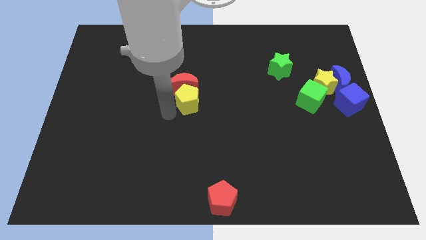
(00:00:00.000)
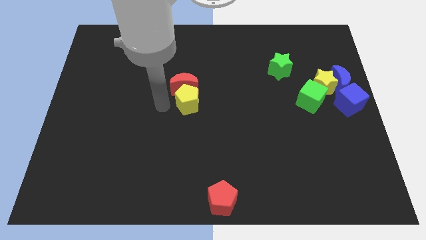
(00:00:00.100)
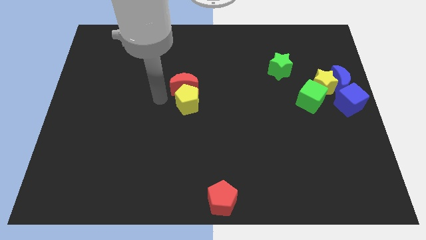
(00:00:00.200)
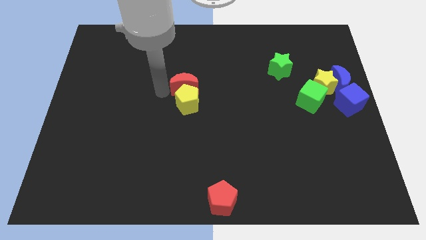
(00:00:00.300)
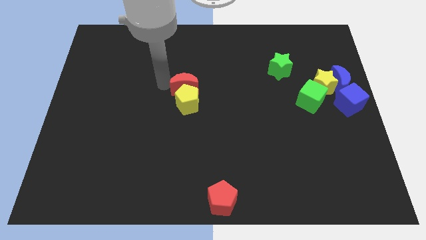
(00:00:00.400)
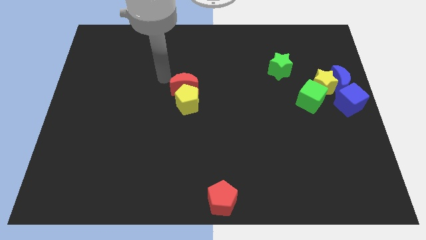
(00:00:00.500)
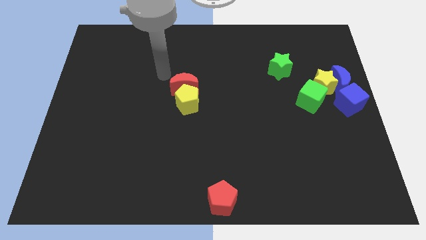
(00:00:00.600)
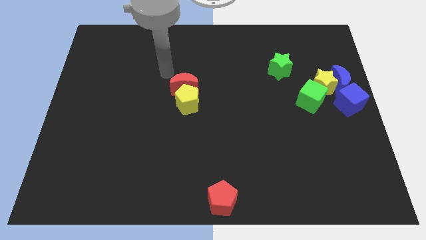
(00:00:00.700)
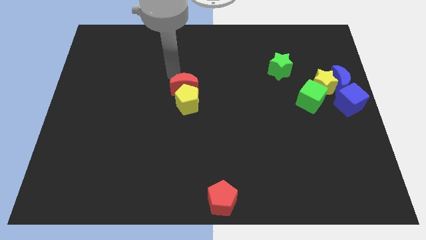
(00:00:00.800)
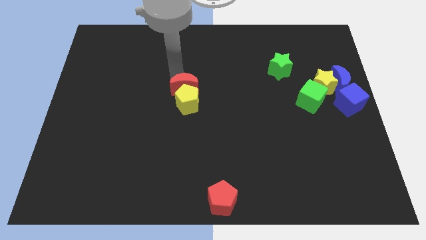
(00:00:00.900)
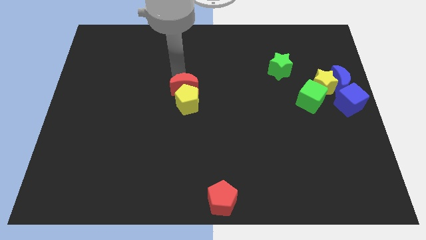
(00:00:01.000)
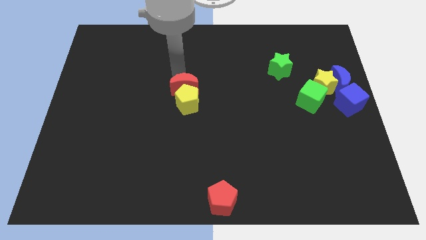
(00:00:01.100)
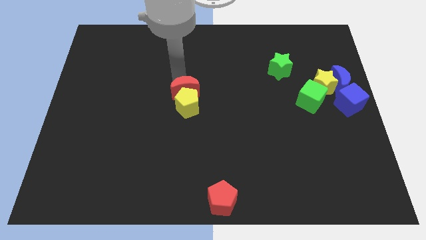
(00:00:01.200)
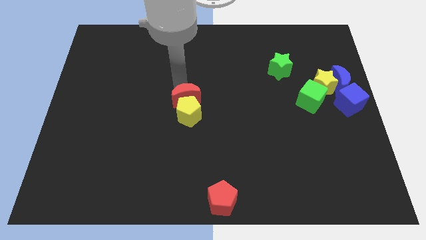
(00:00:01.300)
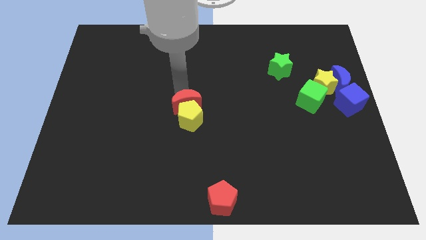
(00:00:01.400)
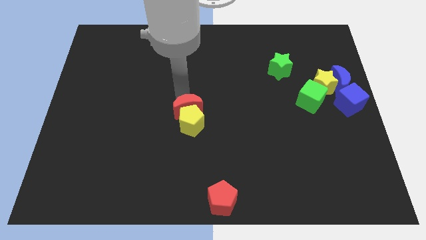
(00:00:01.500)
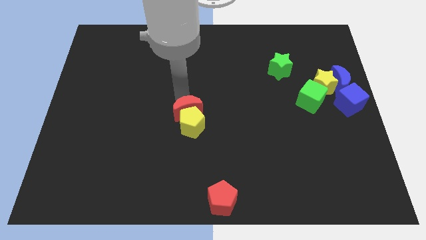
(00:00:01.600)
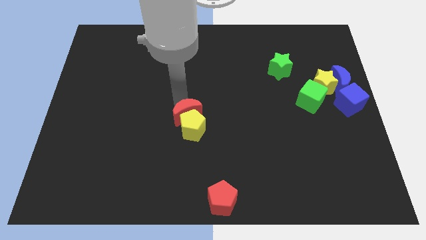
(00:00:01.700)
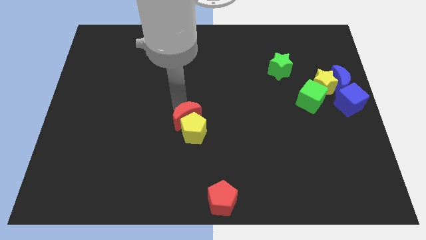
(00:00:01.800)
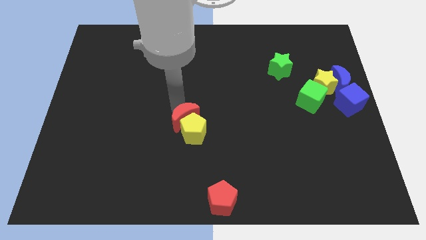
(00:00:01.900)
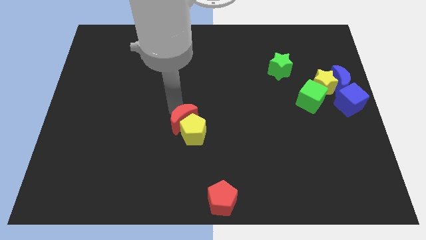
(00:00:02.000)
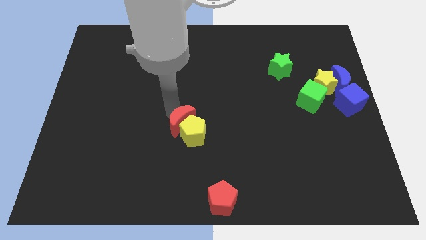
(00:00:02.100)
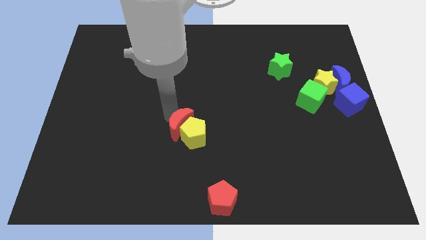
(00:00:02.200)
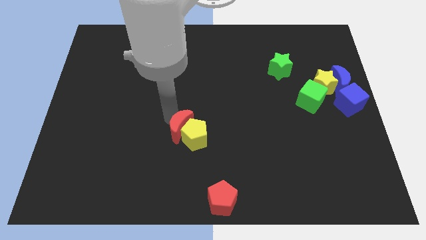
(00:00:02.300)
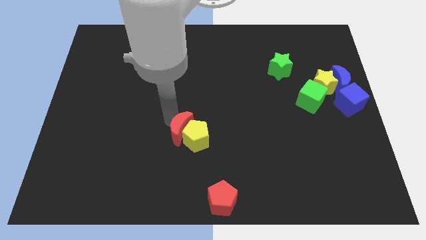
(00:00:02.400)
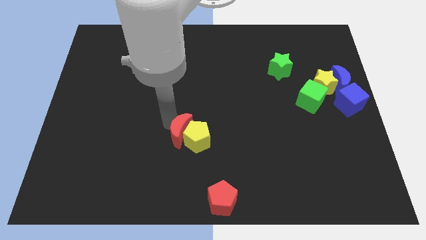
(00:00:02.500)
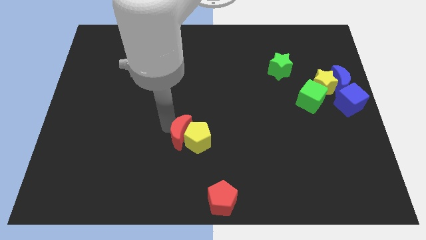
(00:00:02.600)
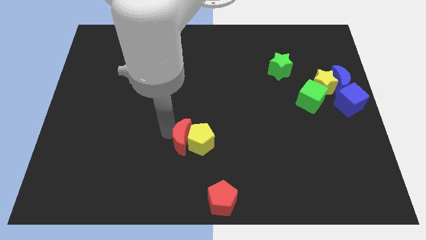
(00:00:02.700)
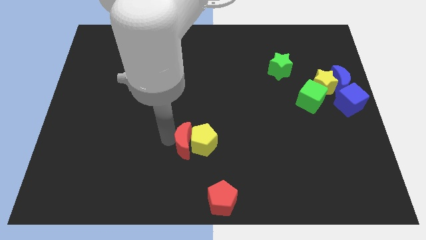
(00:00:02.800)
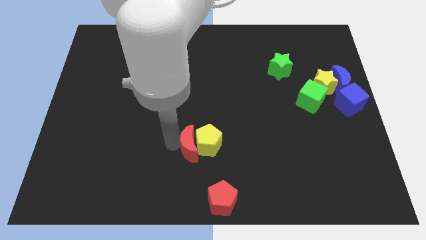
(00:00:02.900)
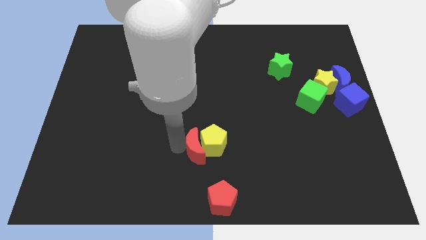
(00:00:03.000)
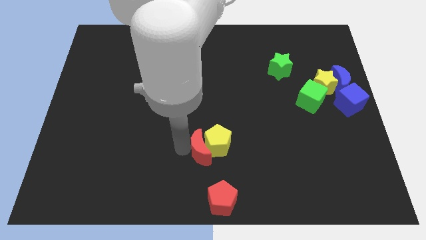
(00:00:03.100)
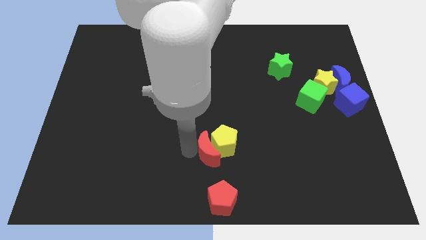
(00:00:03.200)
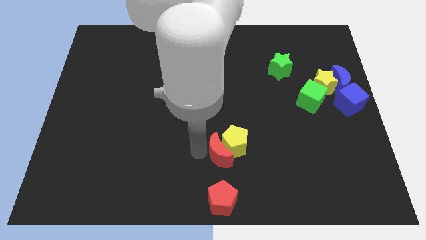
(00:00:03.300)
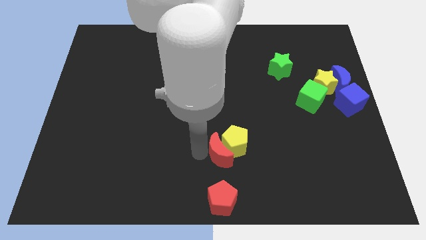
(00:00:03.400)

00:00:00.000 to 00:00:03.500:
place the red moon and yellow pentagon at the top side of the red pentagon

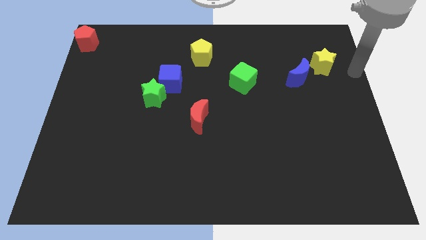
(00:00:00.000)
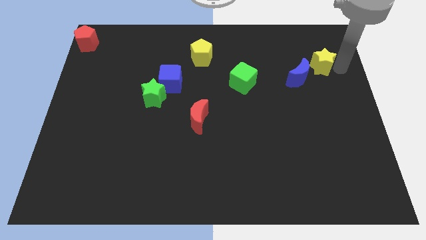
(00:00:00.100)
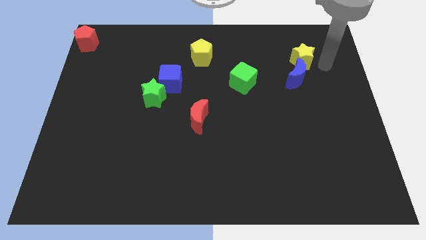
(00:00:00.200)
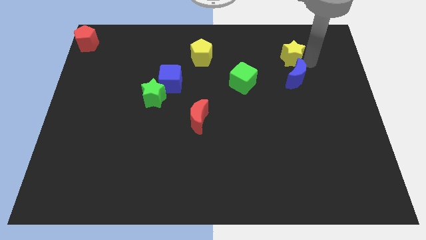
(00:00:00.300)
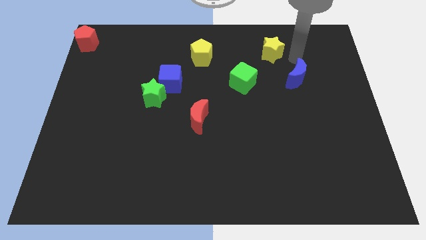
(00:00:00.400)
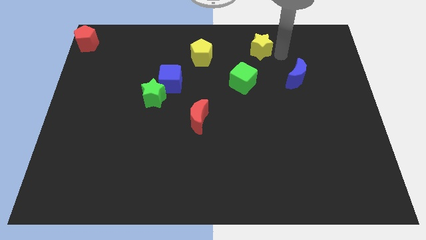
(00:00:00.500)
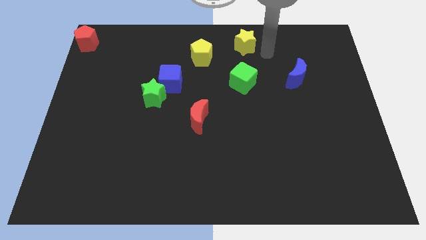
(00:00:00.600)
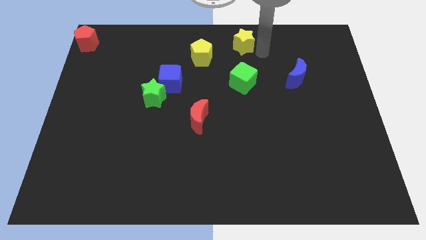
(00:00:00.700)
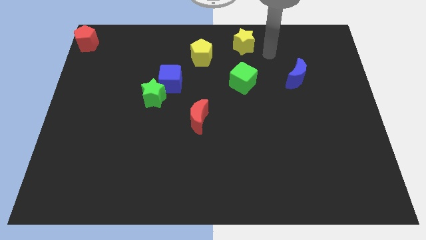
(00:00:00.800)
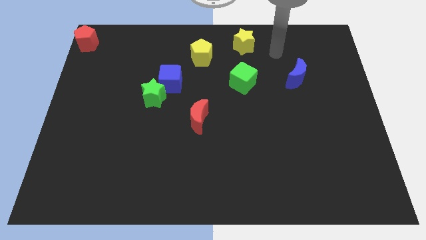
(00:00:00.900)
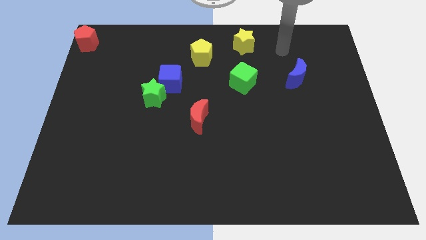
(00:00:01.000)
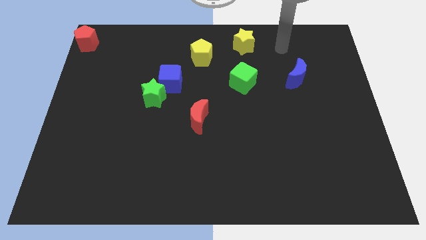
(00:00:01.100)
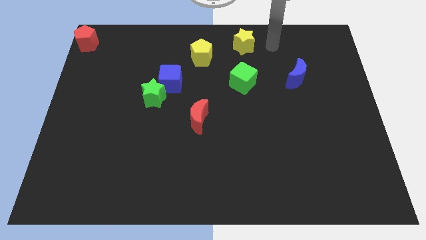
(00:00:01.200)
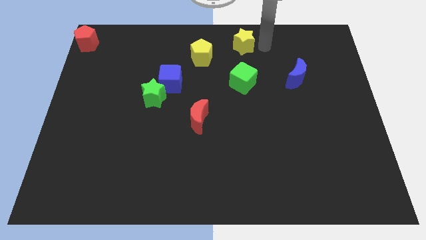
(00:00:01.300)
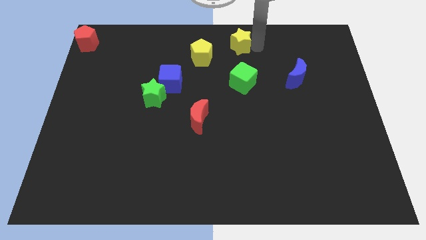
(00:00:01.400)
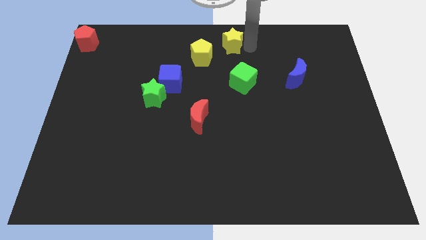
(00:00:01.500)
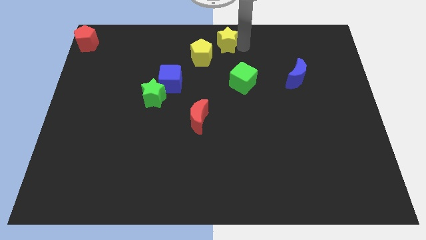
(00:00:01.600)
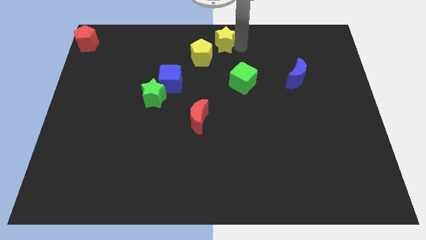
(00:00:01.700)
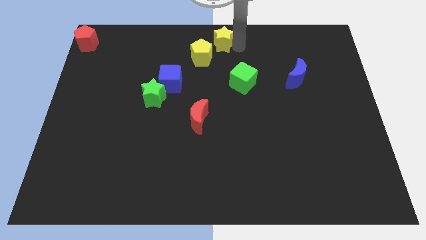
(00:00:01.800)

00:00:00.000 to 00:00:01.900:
place a yellow star towards the top right of the yellow pentagon

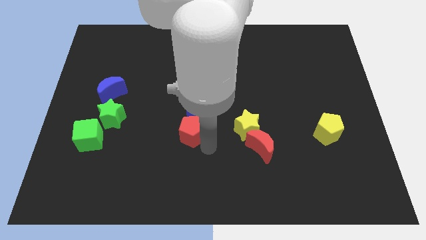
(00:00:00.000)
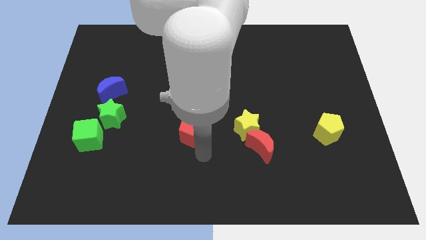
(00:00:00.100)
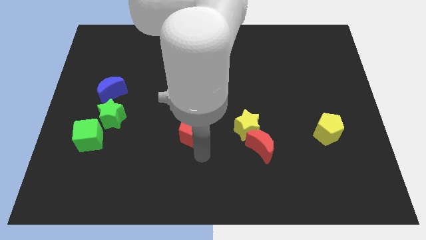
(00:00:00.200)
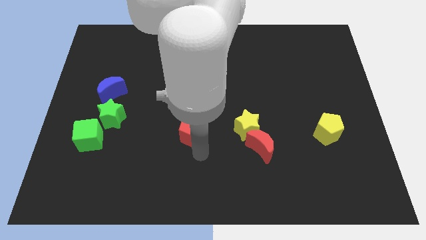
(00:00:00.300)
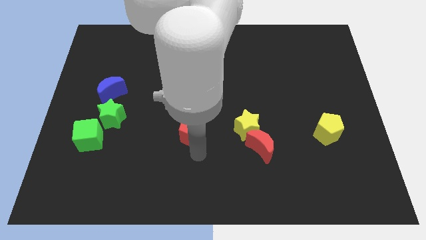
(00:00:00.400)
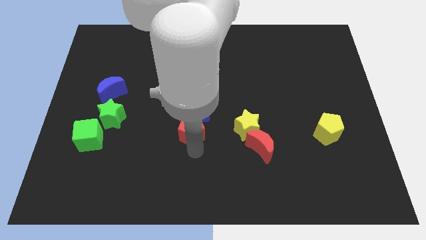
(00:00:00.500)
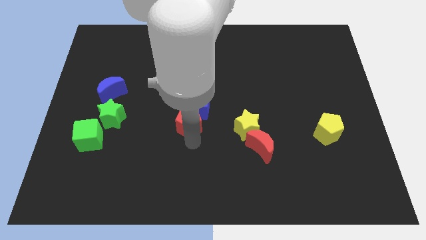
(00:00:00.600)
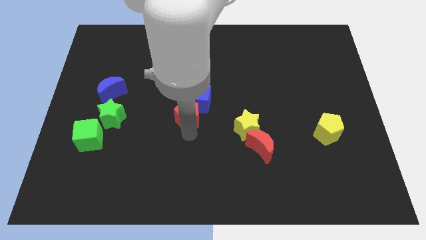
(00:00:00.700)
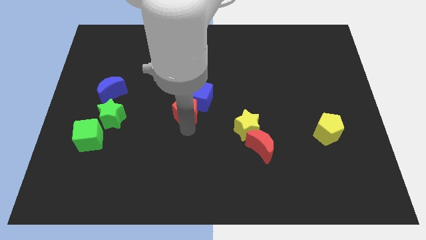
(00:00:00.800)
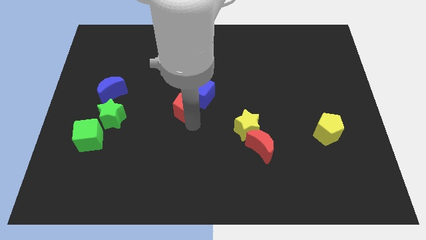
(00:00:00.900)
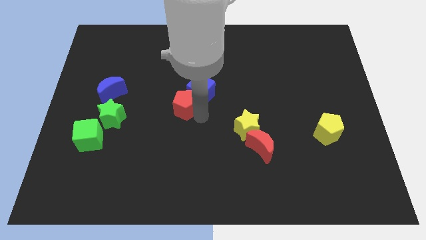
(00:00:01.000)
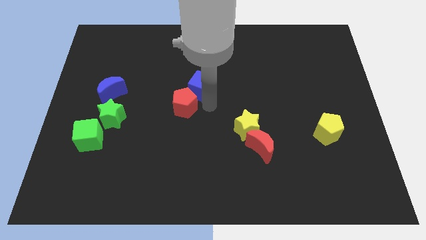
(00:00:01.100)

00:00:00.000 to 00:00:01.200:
move the red pentagon and the blue cube slightly upwards

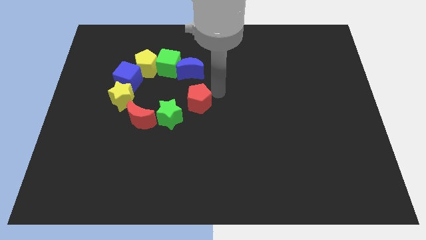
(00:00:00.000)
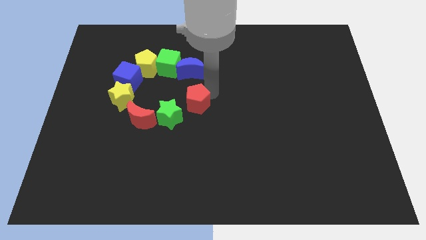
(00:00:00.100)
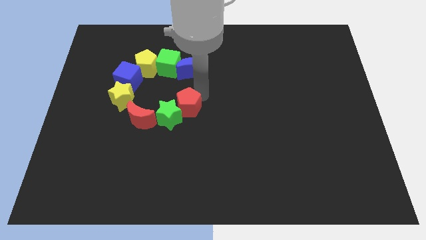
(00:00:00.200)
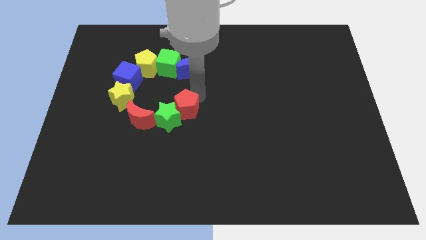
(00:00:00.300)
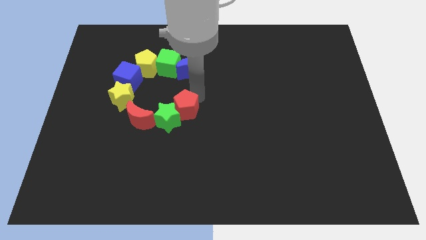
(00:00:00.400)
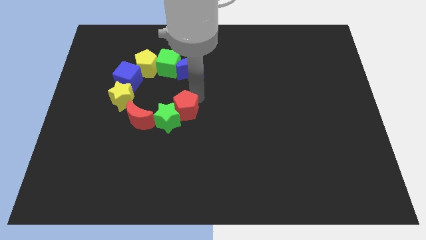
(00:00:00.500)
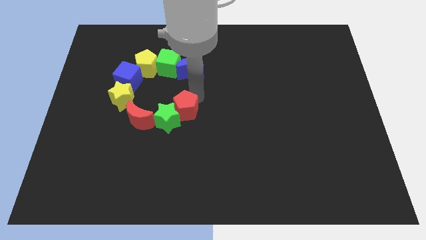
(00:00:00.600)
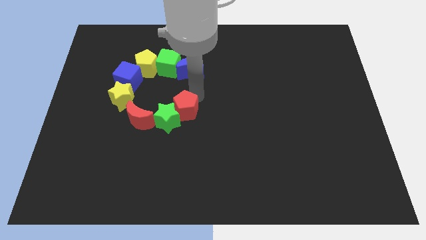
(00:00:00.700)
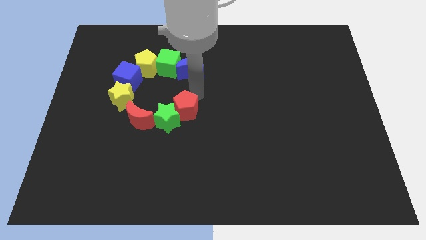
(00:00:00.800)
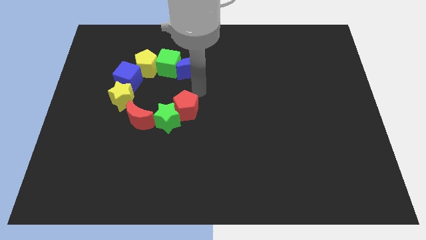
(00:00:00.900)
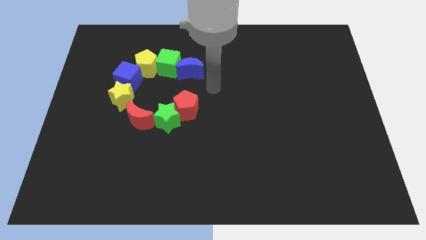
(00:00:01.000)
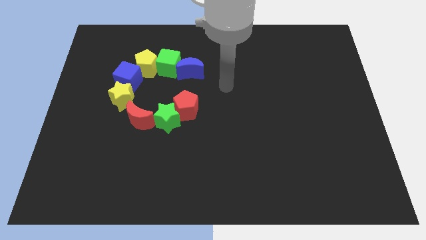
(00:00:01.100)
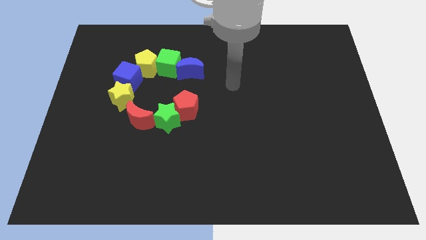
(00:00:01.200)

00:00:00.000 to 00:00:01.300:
place red pentagon to the

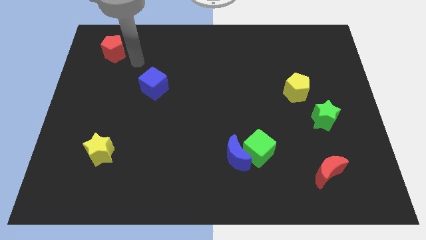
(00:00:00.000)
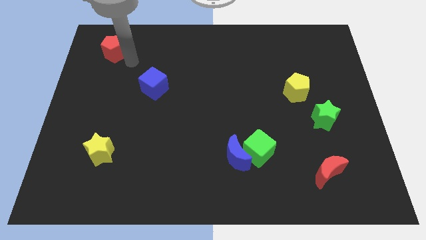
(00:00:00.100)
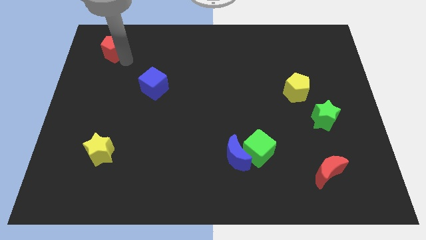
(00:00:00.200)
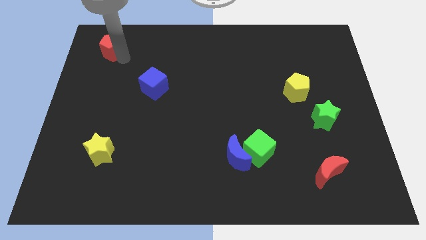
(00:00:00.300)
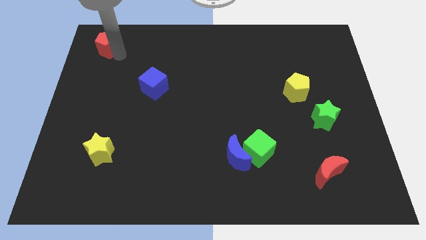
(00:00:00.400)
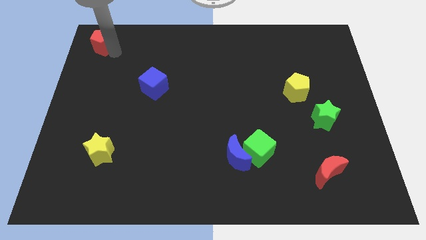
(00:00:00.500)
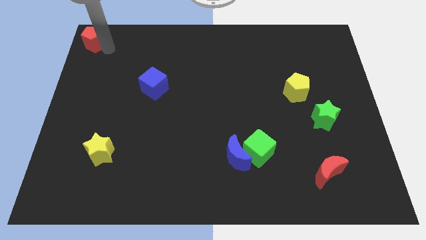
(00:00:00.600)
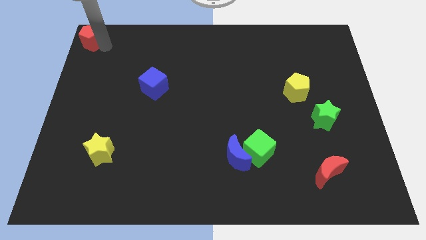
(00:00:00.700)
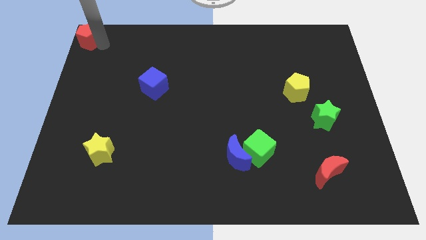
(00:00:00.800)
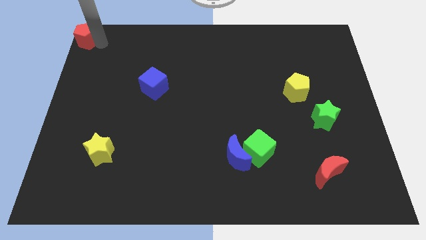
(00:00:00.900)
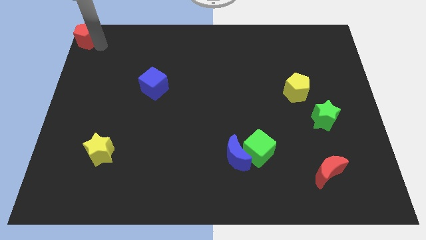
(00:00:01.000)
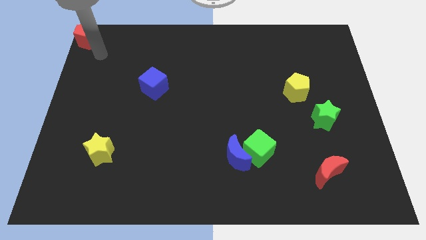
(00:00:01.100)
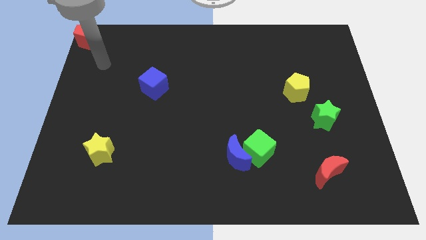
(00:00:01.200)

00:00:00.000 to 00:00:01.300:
move red pentagon to top left corner
